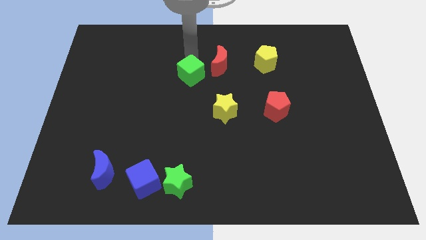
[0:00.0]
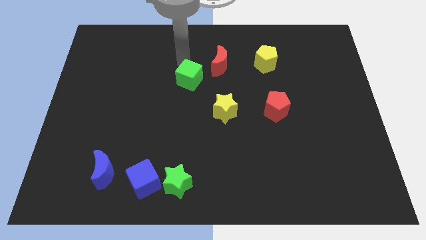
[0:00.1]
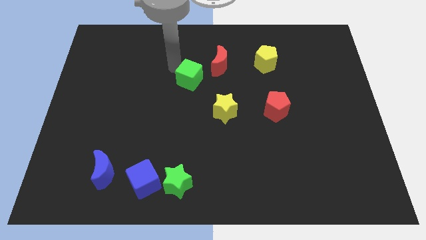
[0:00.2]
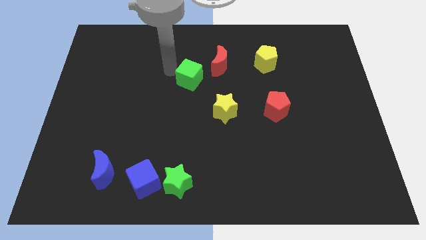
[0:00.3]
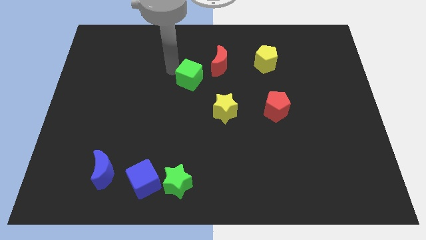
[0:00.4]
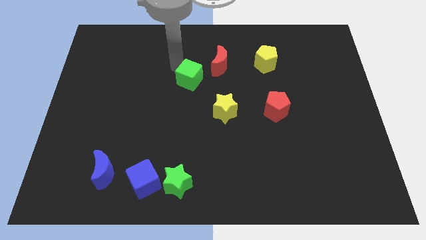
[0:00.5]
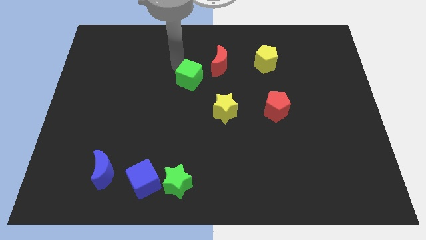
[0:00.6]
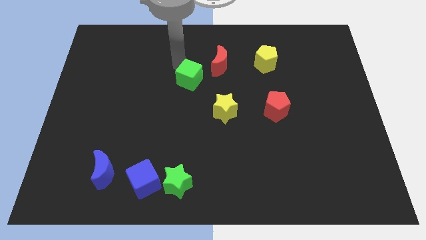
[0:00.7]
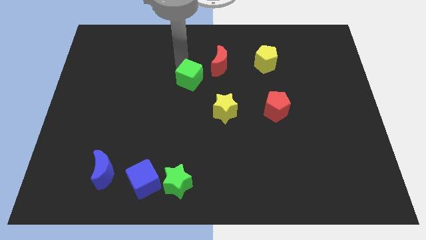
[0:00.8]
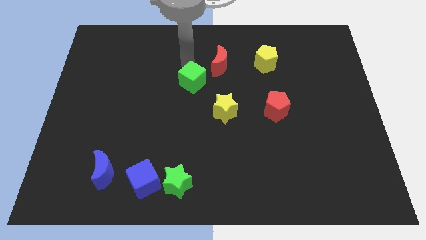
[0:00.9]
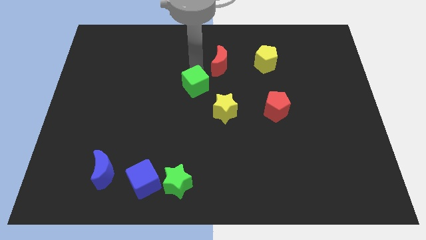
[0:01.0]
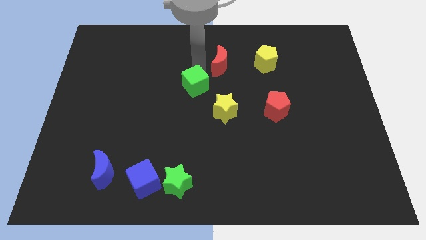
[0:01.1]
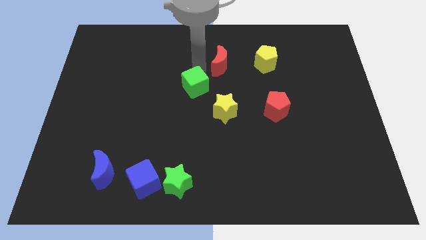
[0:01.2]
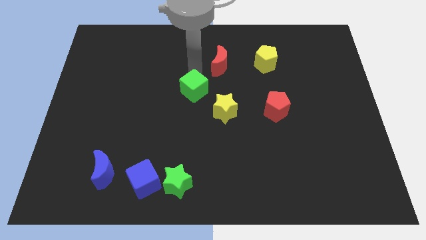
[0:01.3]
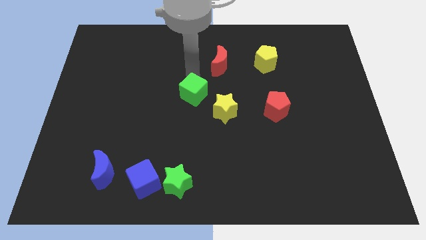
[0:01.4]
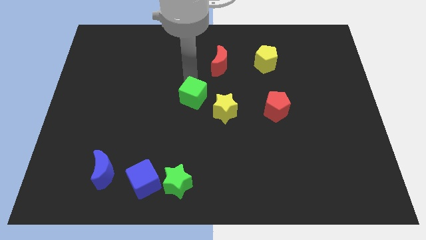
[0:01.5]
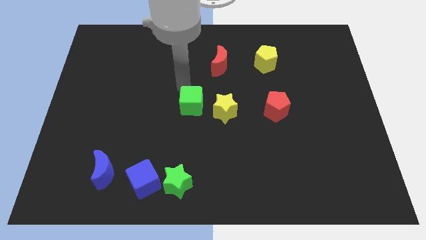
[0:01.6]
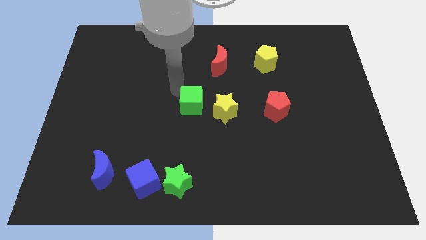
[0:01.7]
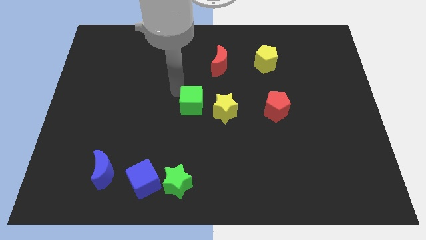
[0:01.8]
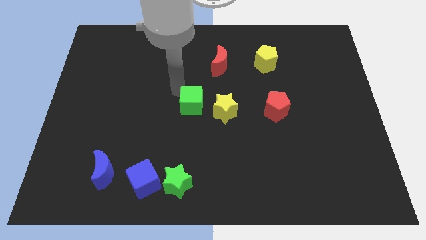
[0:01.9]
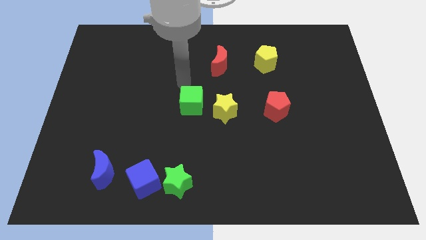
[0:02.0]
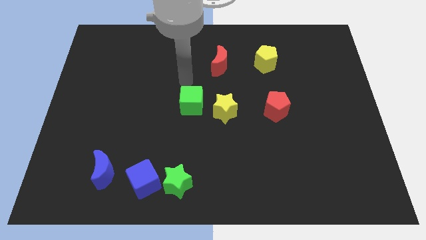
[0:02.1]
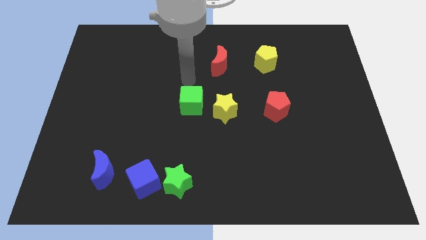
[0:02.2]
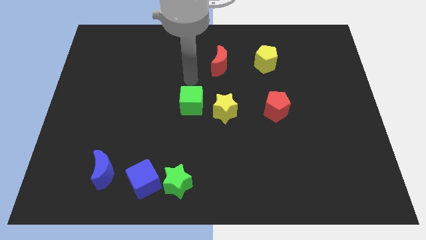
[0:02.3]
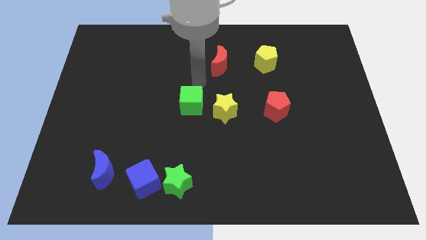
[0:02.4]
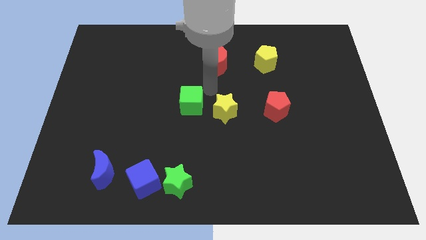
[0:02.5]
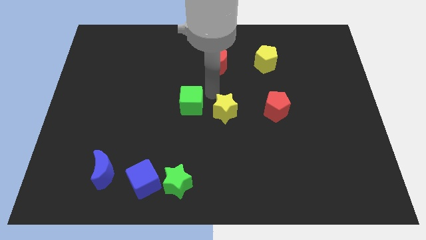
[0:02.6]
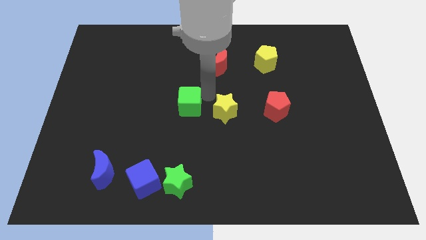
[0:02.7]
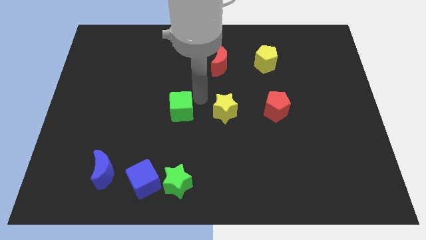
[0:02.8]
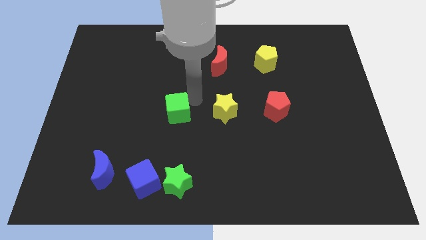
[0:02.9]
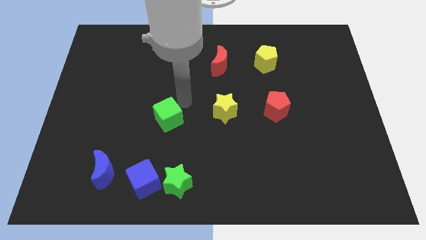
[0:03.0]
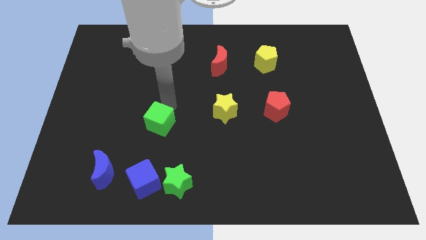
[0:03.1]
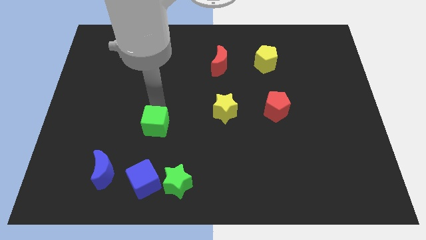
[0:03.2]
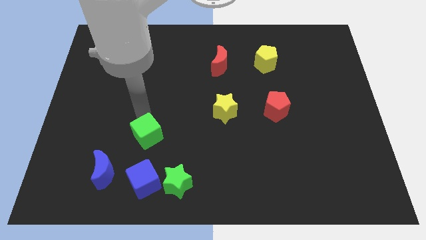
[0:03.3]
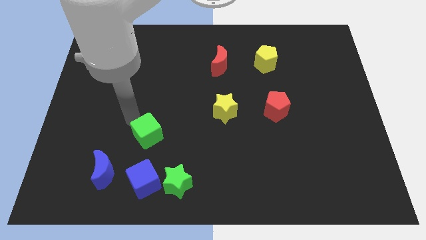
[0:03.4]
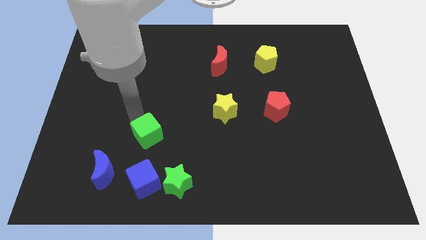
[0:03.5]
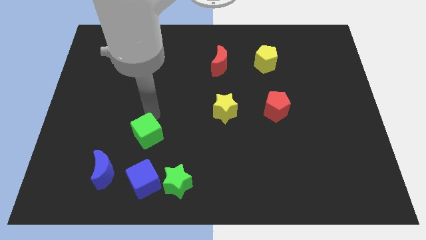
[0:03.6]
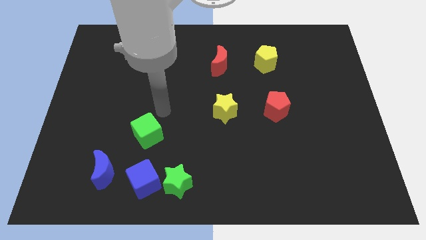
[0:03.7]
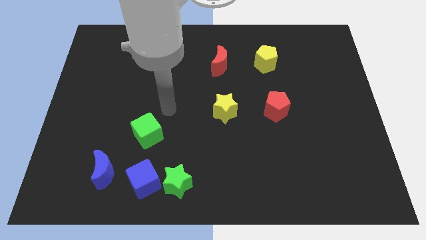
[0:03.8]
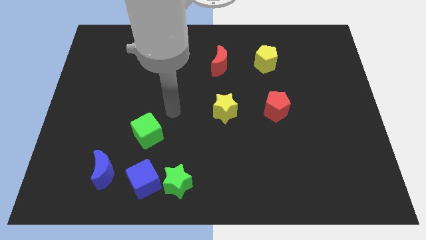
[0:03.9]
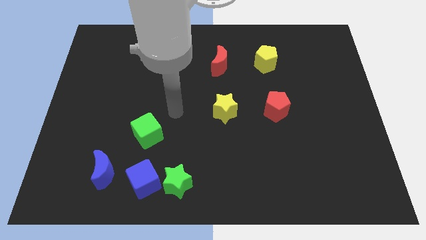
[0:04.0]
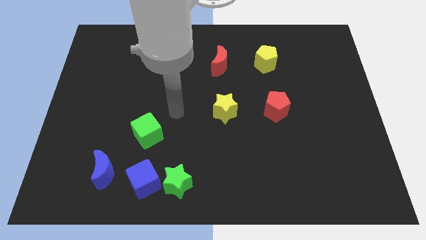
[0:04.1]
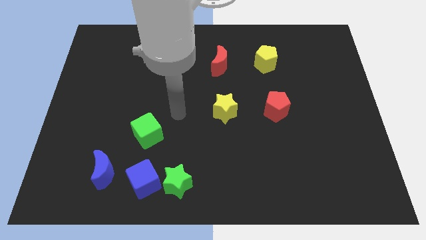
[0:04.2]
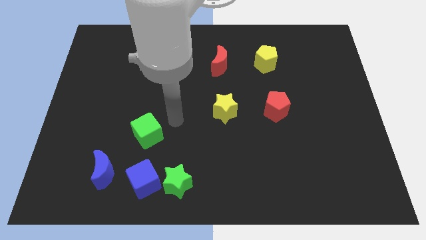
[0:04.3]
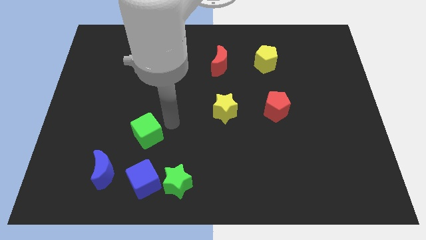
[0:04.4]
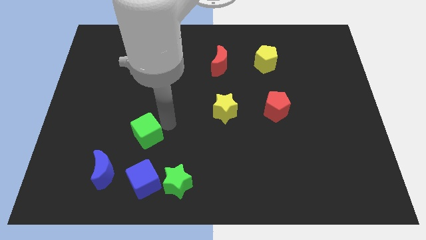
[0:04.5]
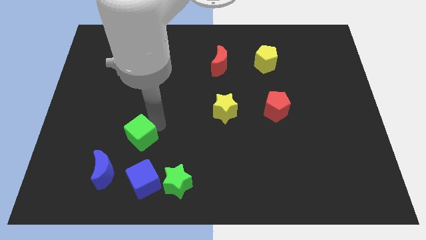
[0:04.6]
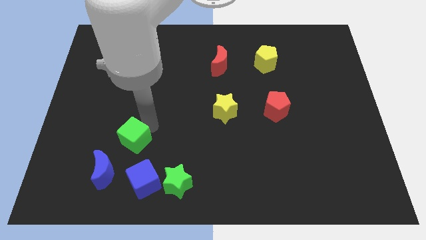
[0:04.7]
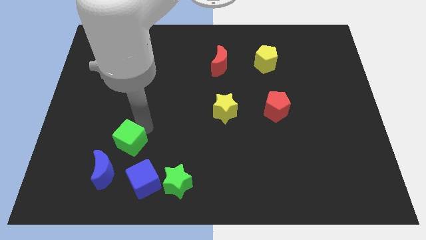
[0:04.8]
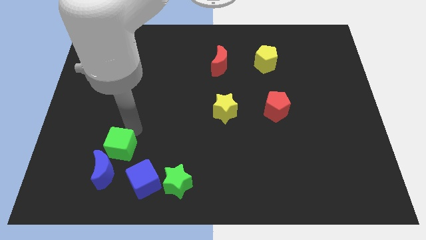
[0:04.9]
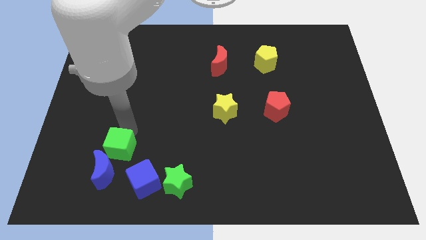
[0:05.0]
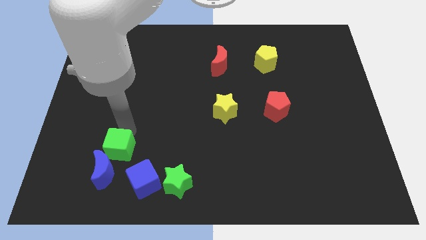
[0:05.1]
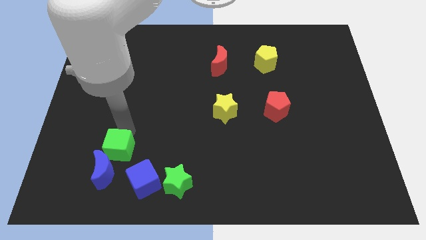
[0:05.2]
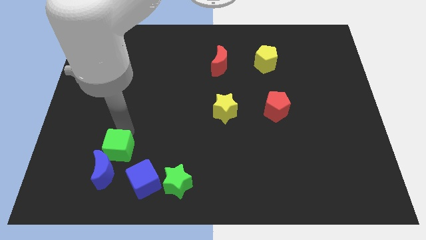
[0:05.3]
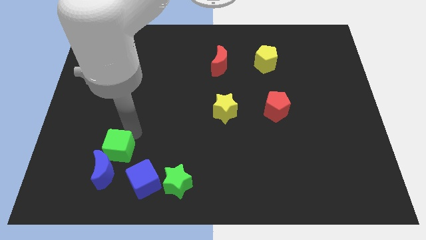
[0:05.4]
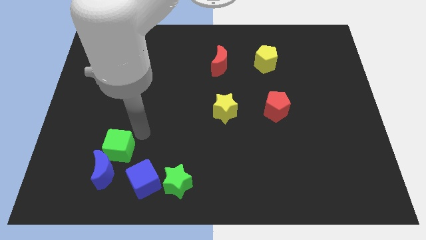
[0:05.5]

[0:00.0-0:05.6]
push the green cube towards the blue crescent

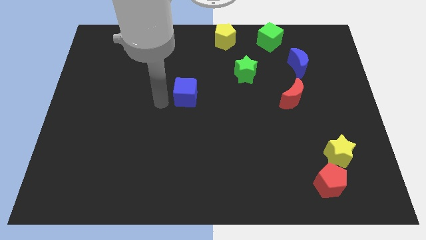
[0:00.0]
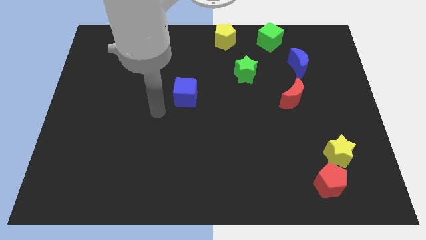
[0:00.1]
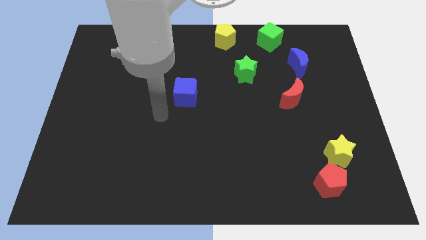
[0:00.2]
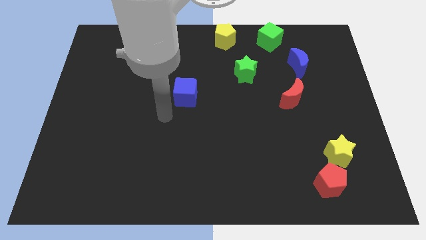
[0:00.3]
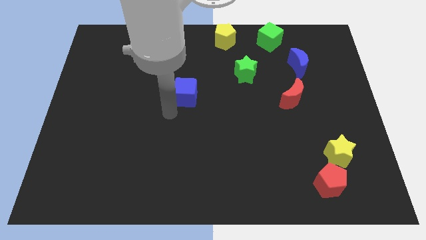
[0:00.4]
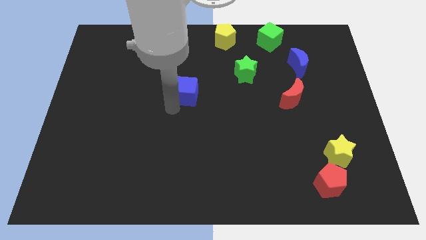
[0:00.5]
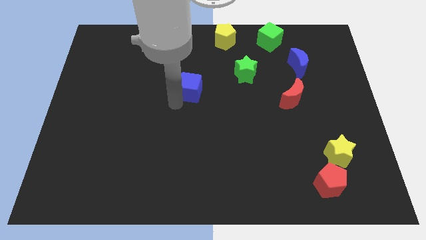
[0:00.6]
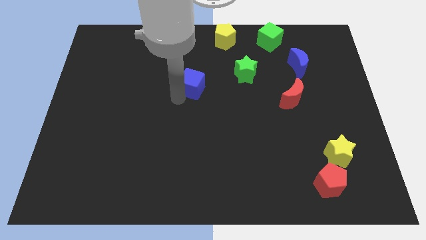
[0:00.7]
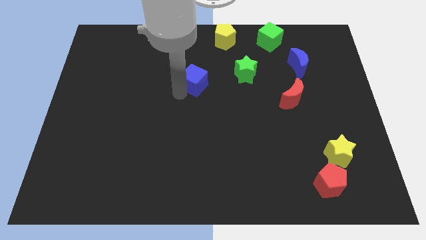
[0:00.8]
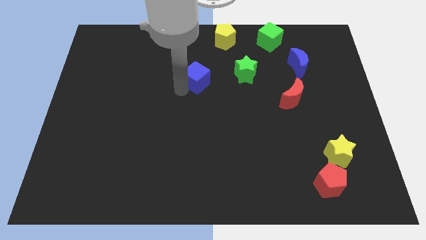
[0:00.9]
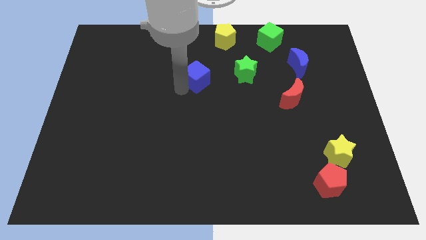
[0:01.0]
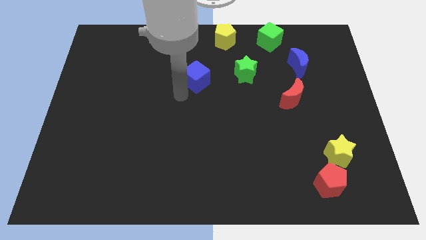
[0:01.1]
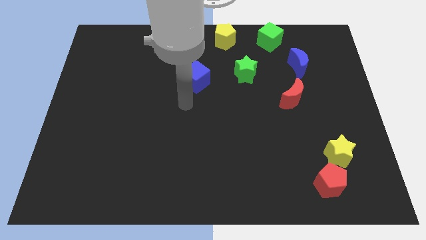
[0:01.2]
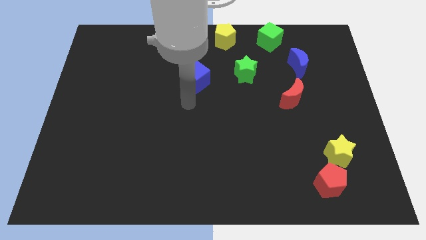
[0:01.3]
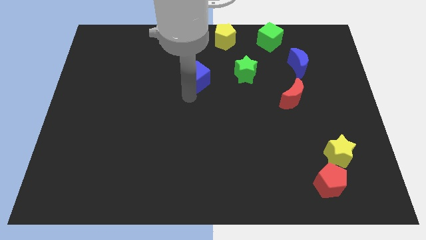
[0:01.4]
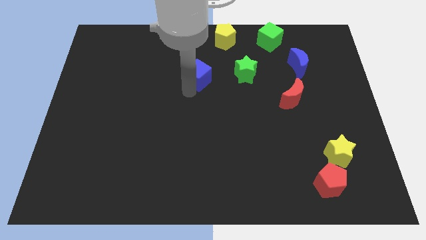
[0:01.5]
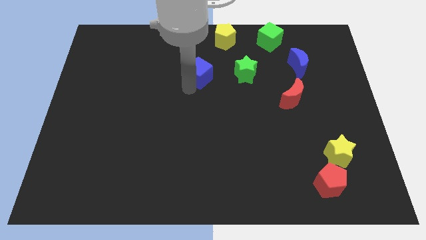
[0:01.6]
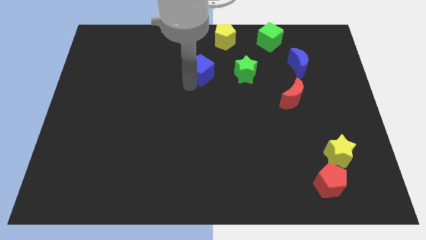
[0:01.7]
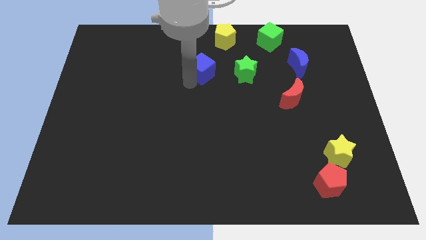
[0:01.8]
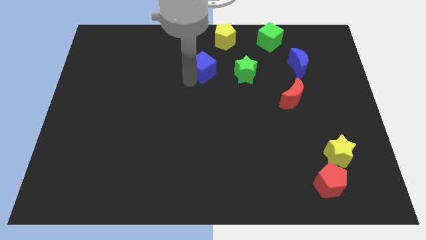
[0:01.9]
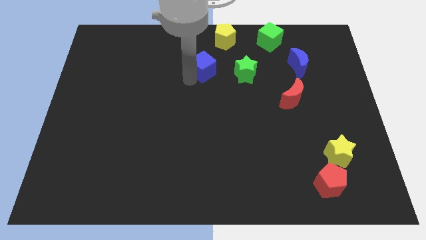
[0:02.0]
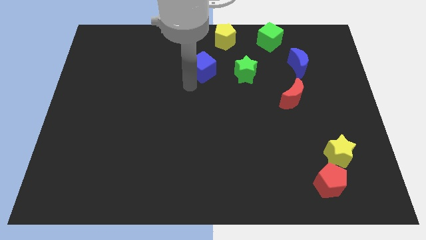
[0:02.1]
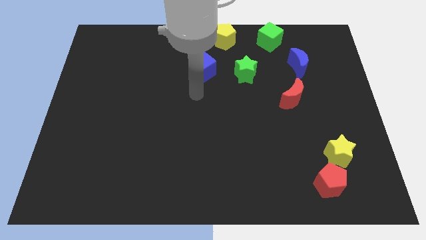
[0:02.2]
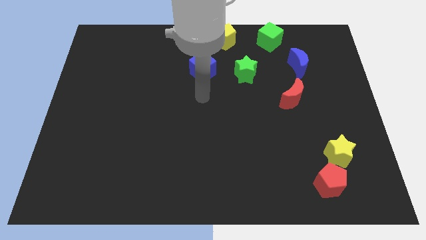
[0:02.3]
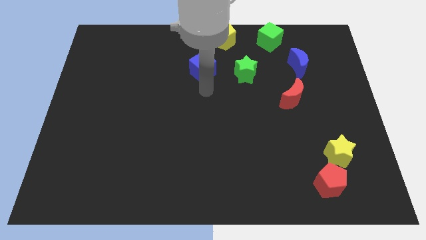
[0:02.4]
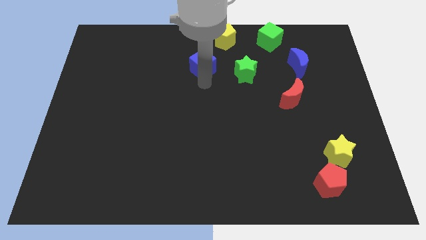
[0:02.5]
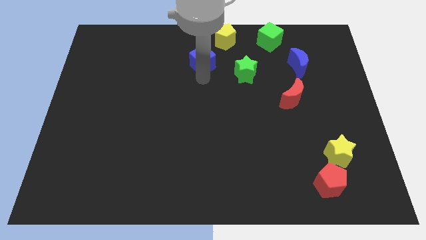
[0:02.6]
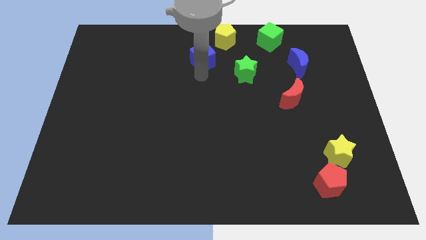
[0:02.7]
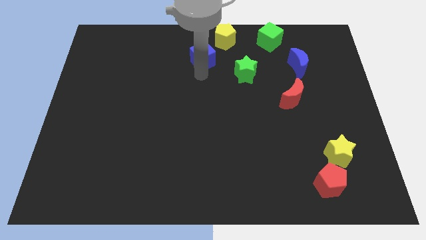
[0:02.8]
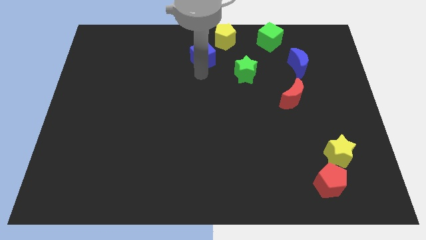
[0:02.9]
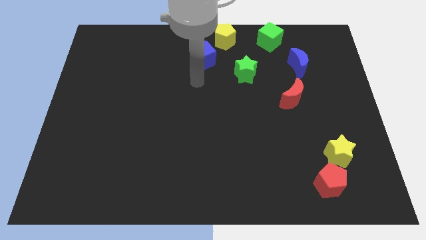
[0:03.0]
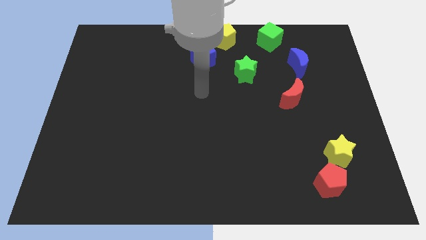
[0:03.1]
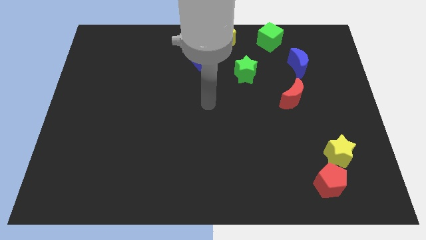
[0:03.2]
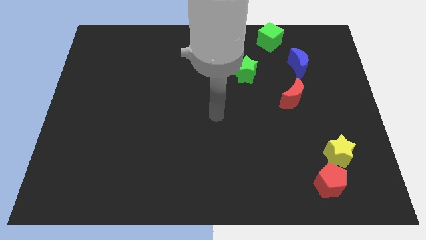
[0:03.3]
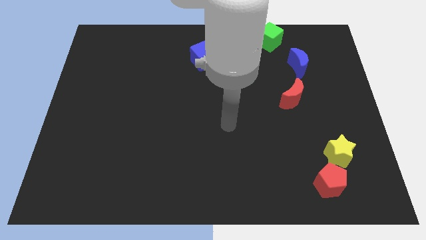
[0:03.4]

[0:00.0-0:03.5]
push the blue cube diagonal left to the yellow pentagon
